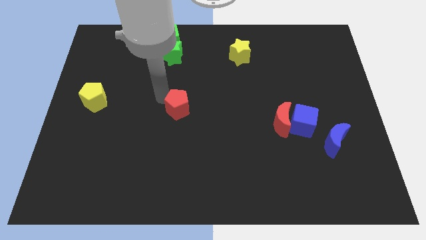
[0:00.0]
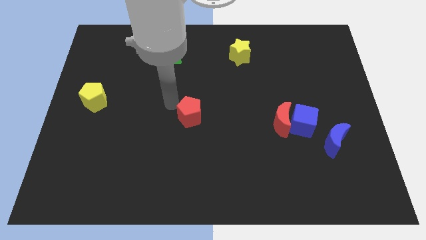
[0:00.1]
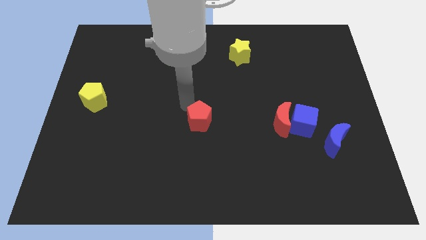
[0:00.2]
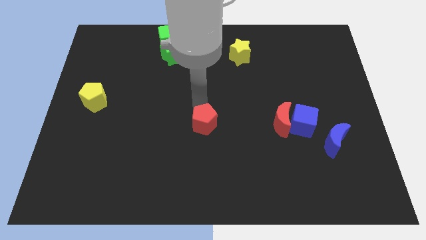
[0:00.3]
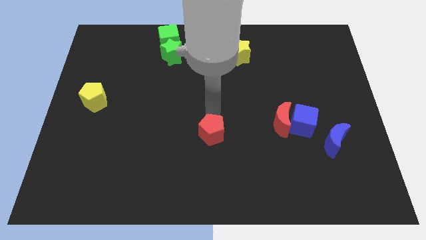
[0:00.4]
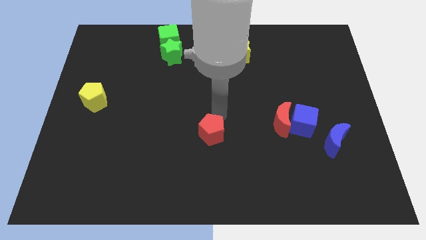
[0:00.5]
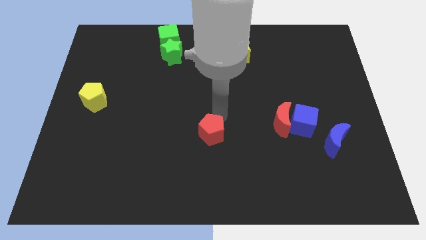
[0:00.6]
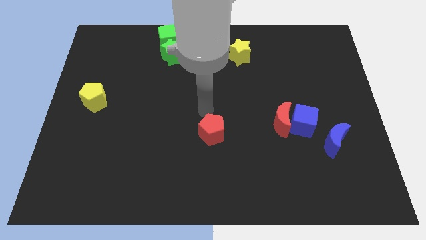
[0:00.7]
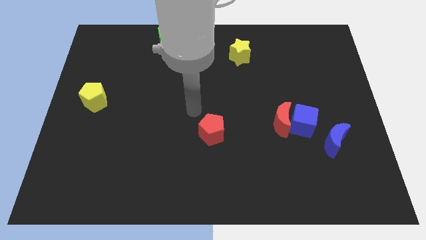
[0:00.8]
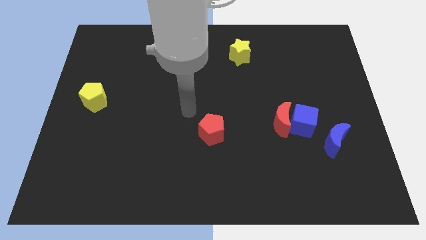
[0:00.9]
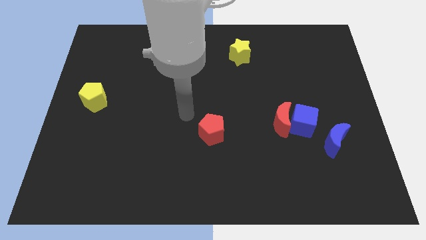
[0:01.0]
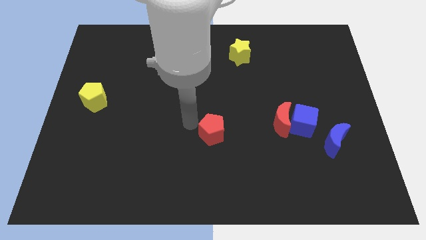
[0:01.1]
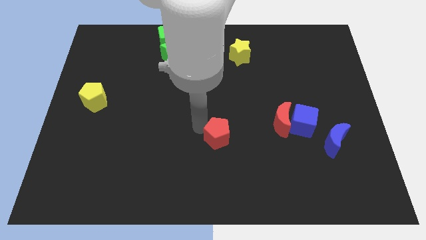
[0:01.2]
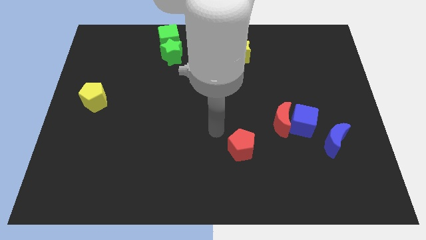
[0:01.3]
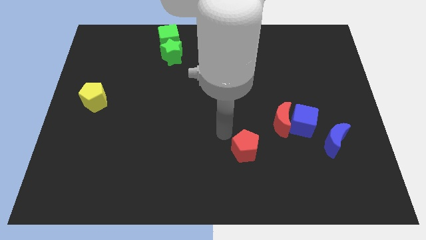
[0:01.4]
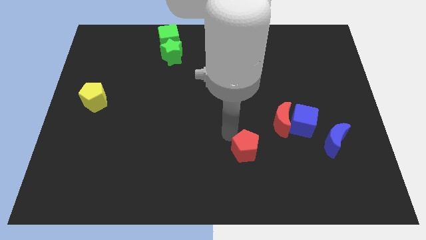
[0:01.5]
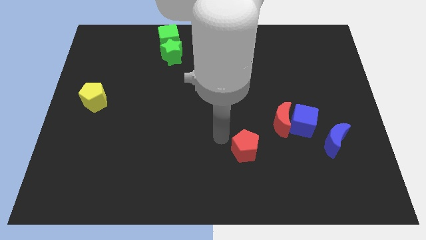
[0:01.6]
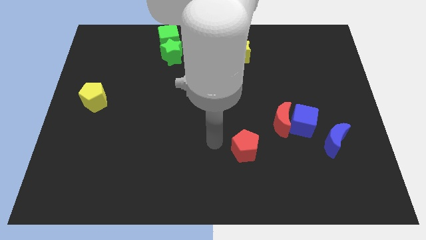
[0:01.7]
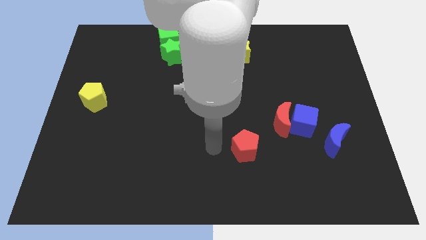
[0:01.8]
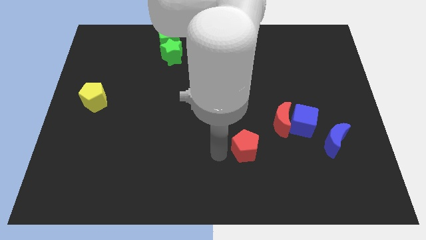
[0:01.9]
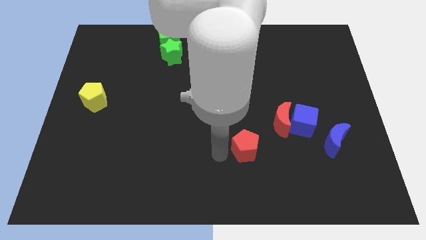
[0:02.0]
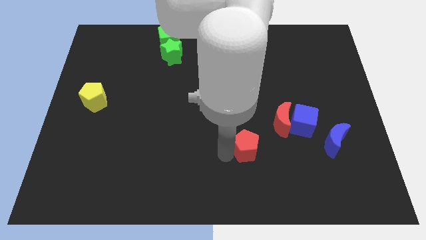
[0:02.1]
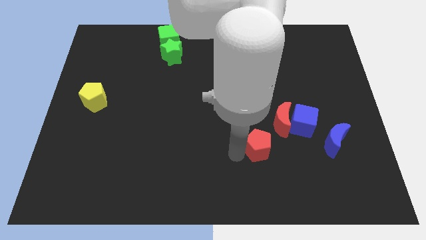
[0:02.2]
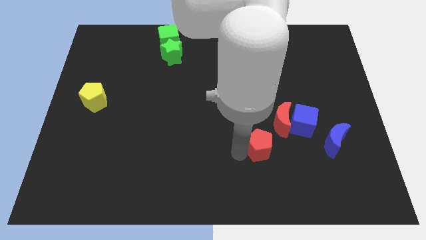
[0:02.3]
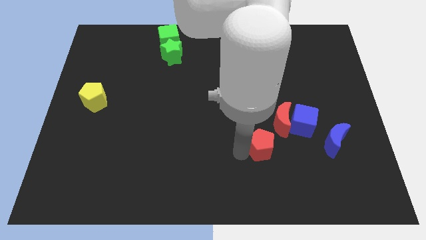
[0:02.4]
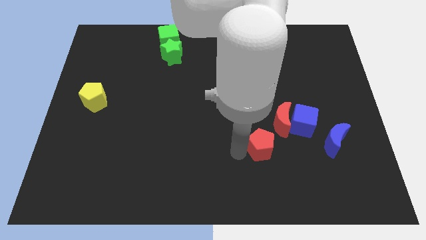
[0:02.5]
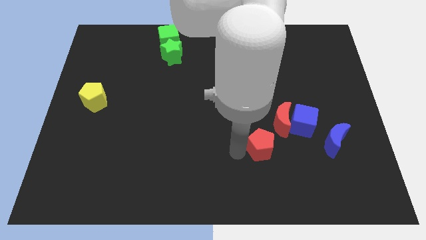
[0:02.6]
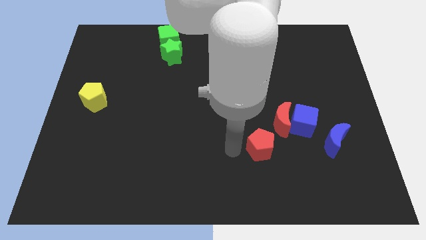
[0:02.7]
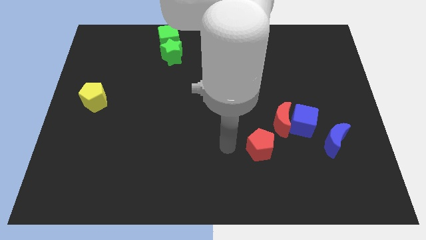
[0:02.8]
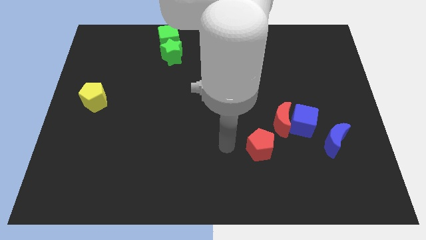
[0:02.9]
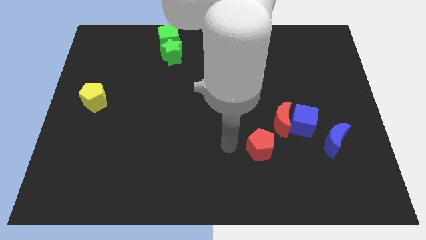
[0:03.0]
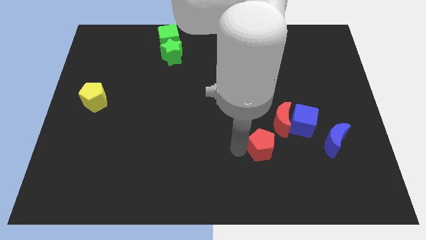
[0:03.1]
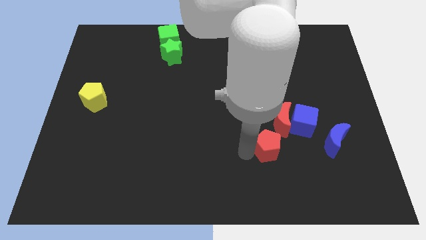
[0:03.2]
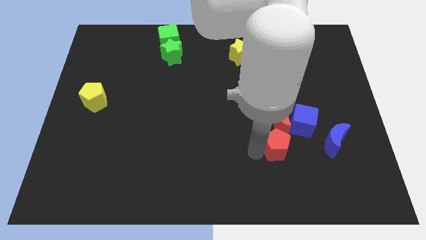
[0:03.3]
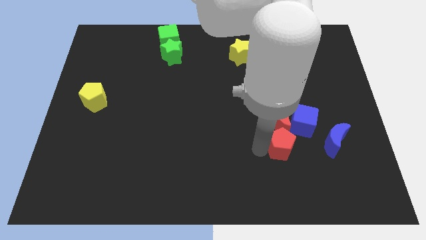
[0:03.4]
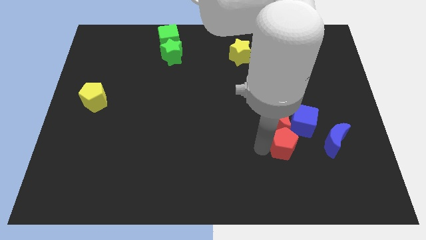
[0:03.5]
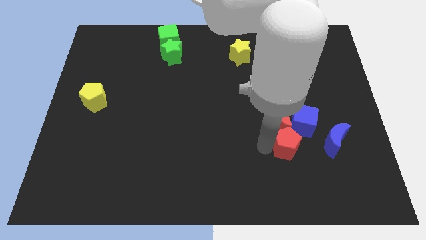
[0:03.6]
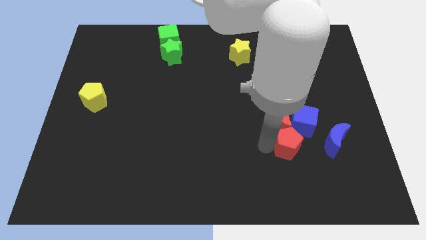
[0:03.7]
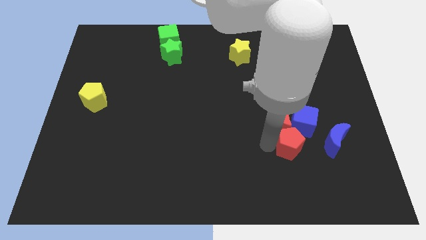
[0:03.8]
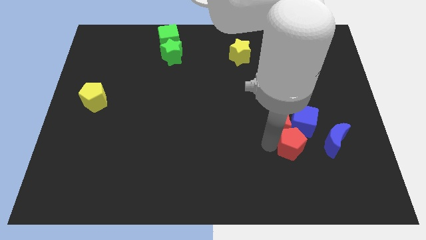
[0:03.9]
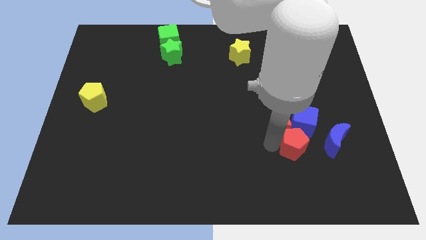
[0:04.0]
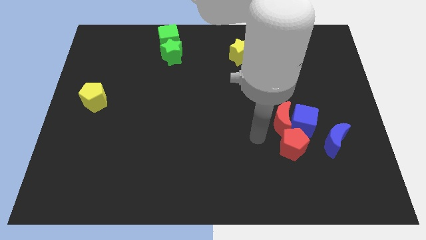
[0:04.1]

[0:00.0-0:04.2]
place red pentagon at the bottom of the red moon

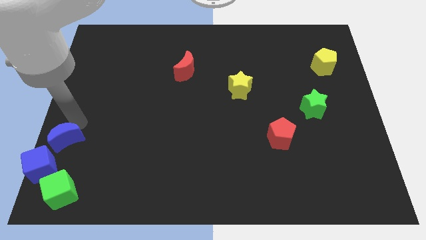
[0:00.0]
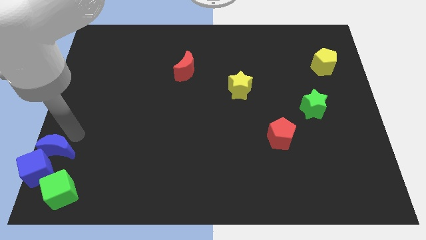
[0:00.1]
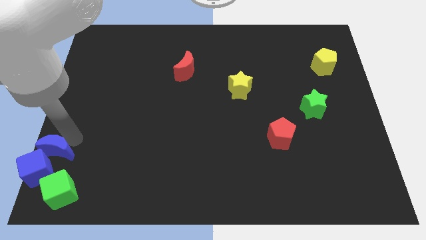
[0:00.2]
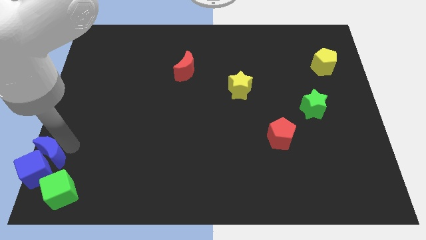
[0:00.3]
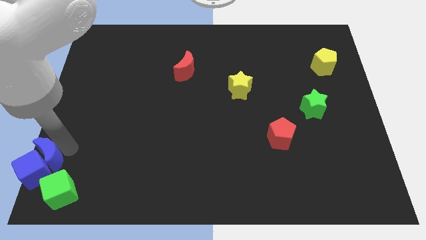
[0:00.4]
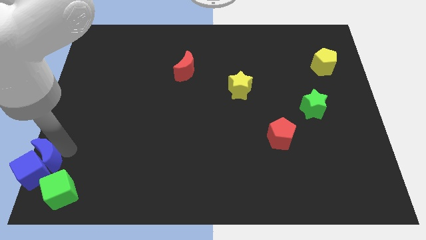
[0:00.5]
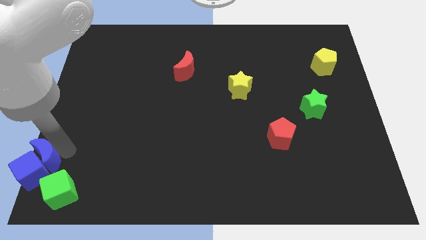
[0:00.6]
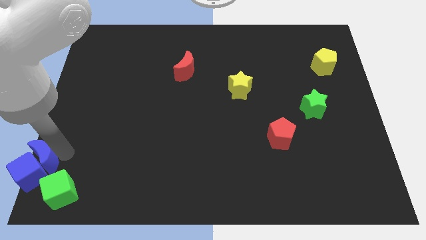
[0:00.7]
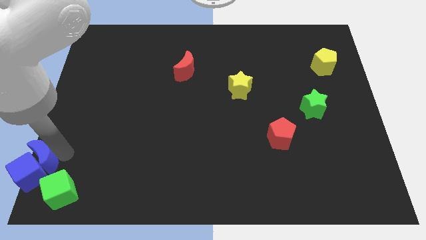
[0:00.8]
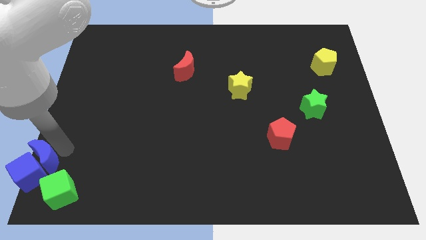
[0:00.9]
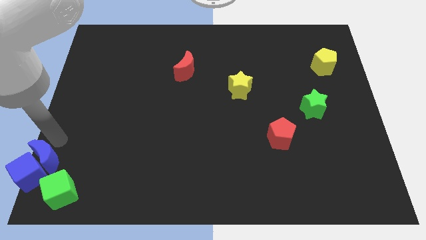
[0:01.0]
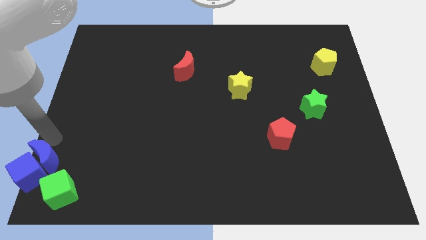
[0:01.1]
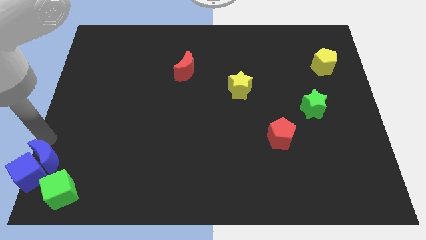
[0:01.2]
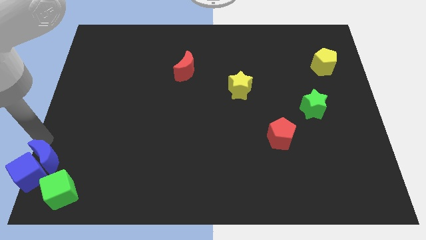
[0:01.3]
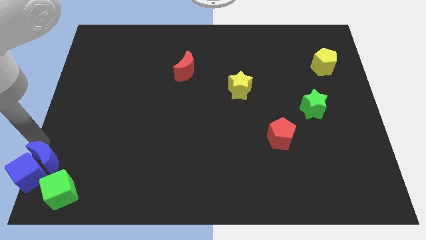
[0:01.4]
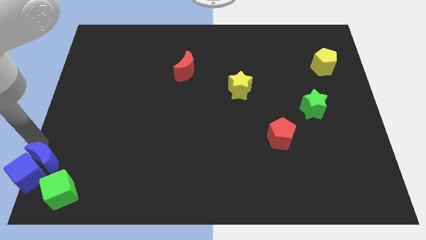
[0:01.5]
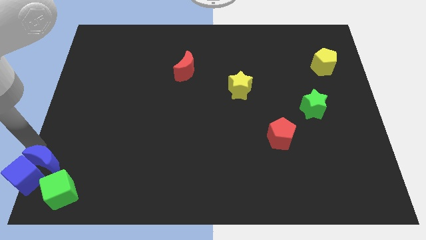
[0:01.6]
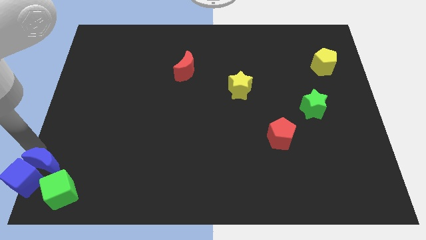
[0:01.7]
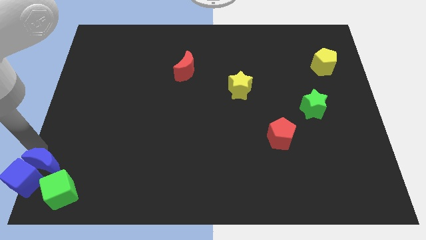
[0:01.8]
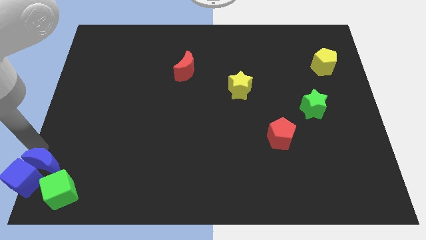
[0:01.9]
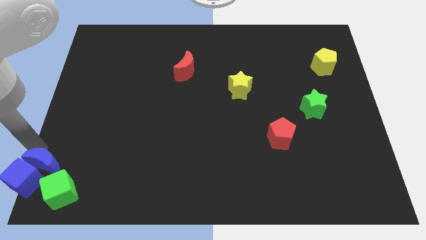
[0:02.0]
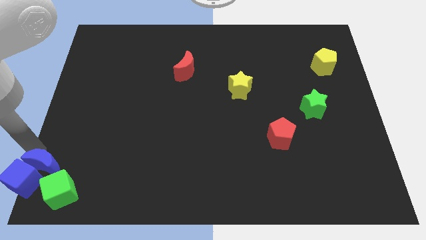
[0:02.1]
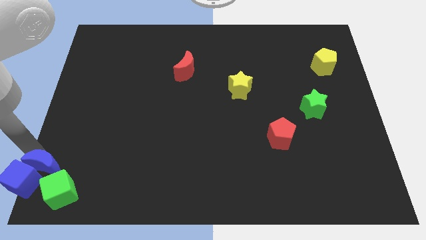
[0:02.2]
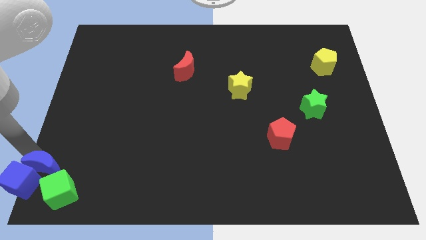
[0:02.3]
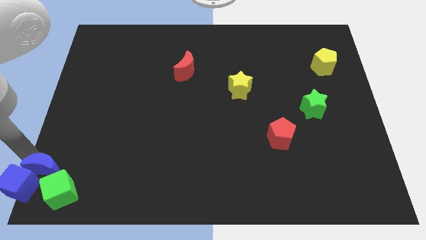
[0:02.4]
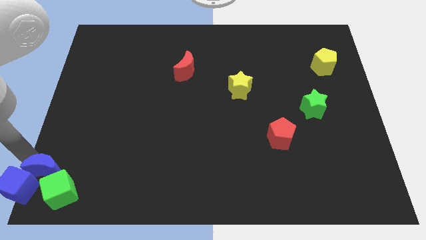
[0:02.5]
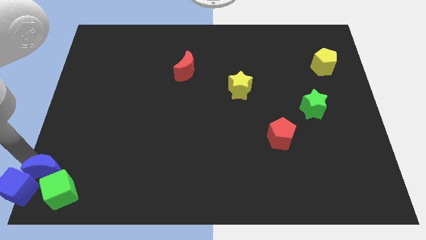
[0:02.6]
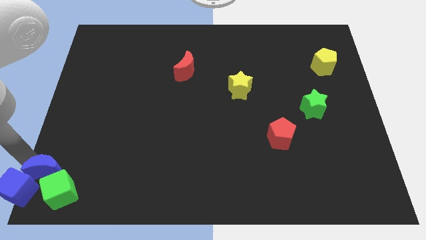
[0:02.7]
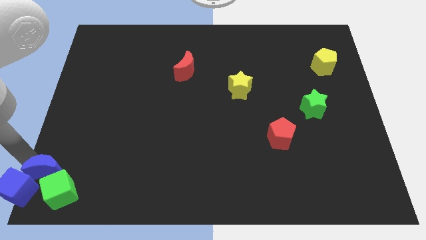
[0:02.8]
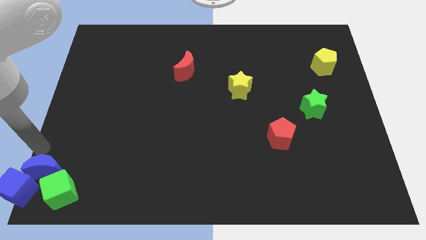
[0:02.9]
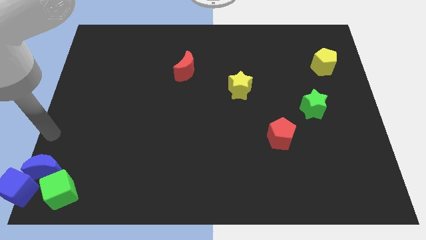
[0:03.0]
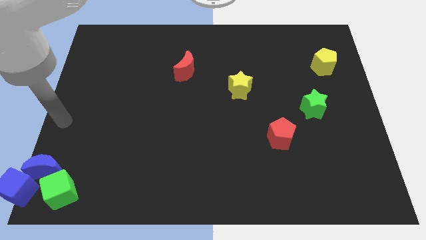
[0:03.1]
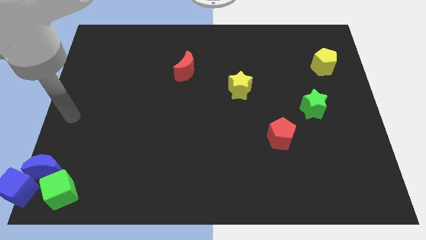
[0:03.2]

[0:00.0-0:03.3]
place the blue crescent into the blue and green cube

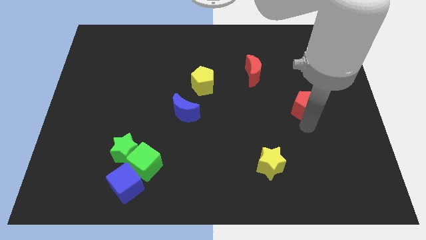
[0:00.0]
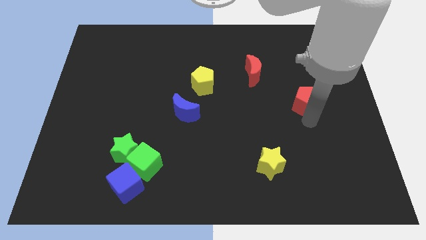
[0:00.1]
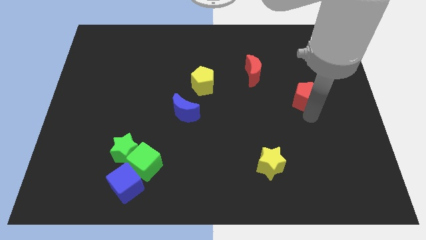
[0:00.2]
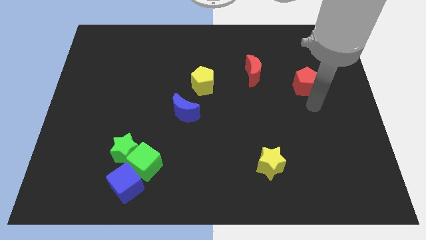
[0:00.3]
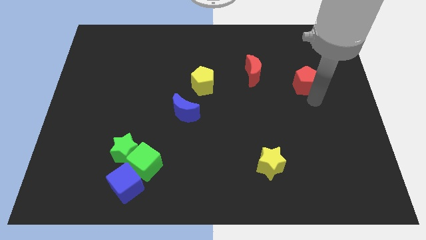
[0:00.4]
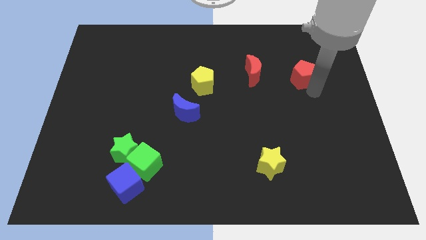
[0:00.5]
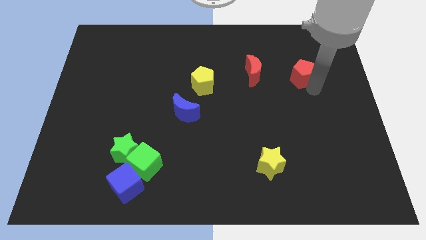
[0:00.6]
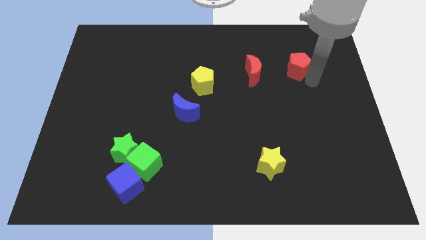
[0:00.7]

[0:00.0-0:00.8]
move the red pentagon to the right of the red moon

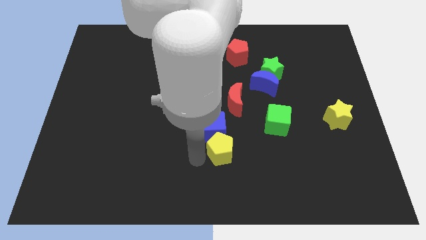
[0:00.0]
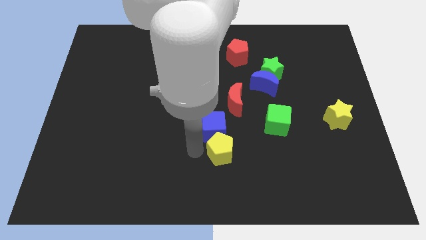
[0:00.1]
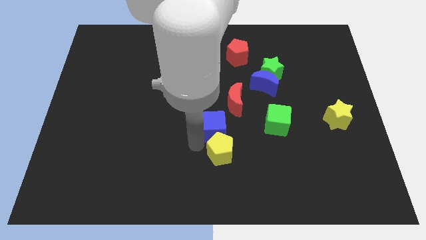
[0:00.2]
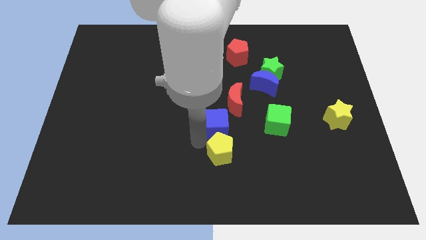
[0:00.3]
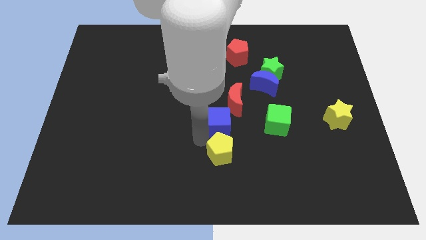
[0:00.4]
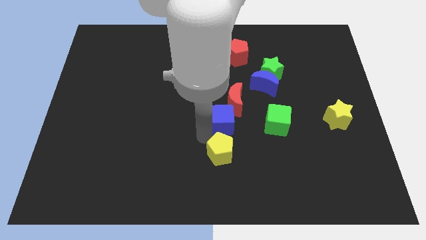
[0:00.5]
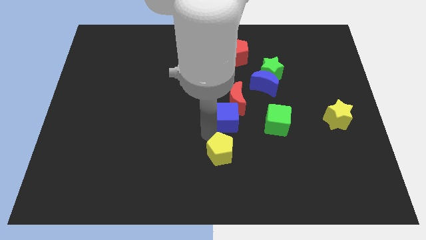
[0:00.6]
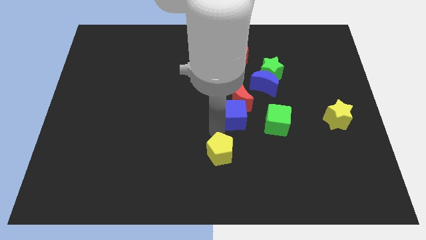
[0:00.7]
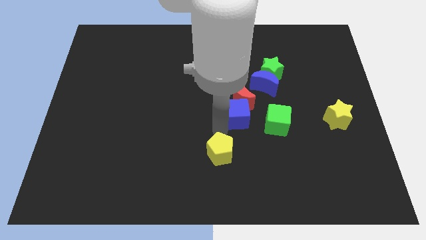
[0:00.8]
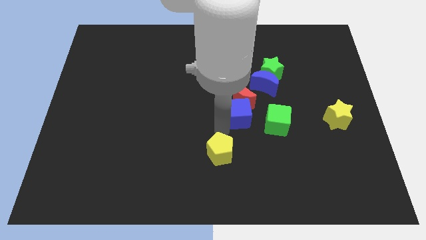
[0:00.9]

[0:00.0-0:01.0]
push blue cube into red crescent
